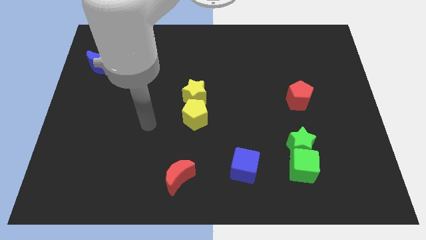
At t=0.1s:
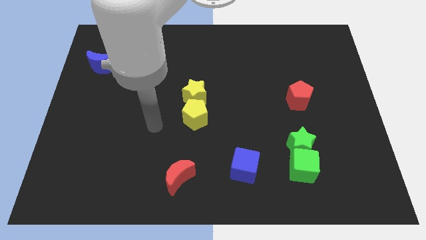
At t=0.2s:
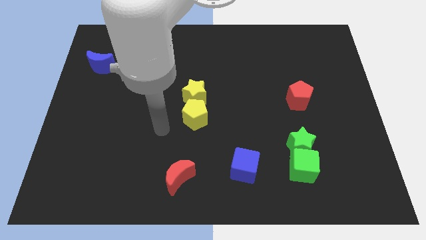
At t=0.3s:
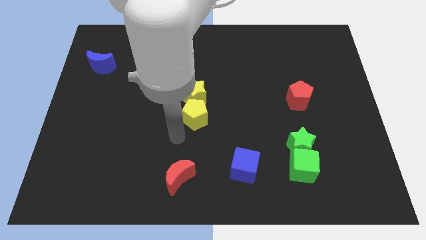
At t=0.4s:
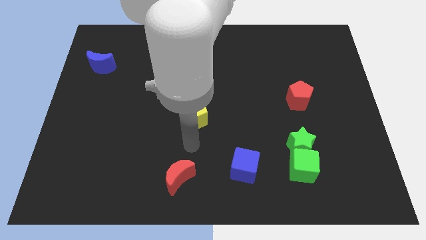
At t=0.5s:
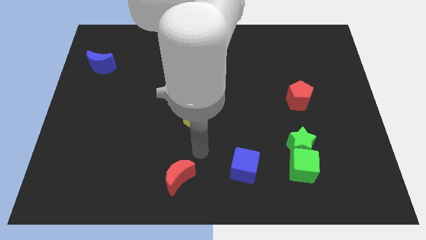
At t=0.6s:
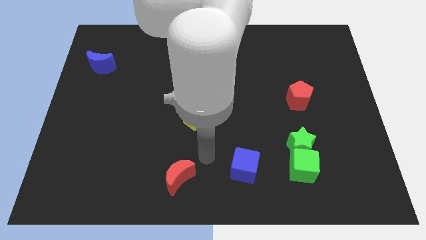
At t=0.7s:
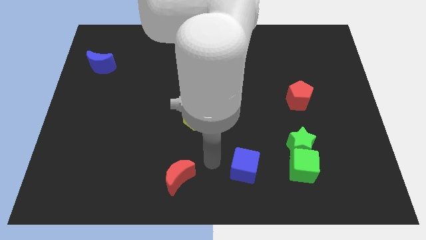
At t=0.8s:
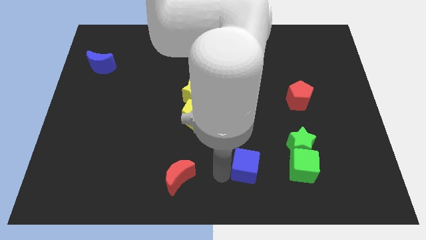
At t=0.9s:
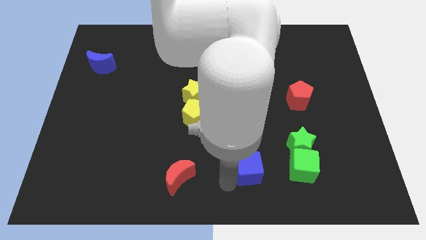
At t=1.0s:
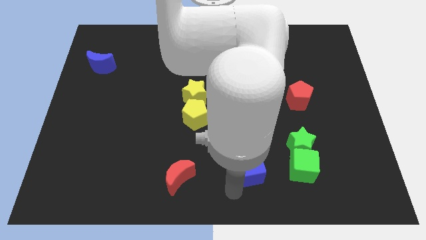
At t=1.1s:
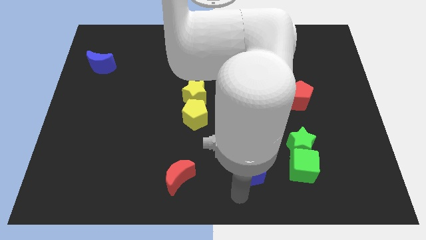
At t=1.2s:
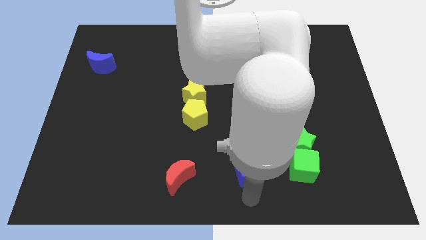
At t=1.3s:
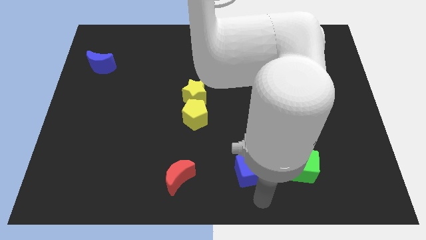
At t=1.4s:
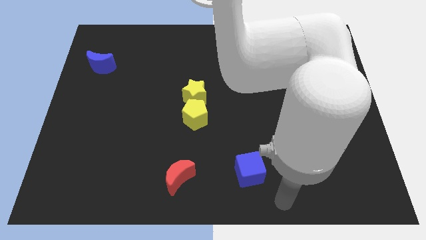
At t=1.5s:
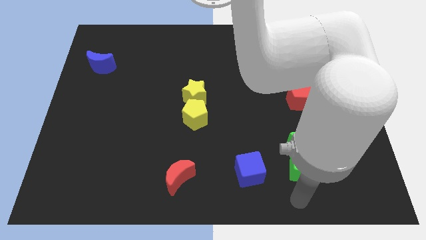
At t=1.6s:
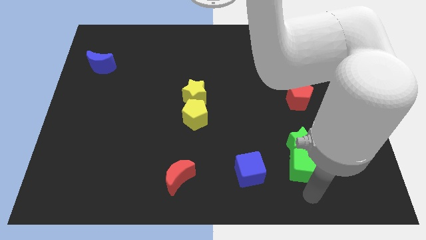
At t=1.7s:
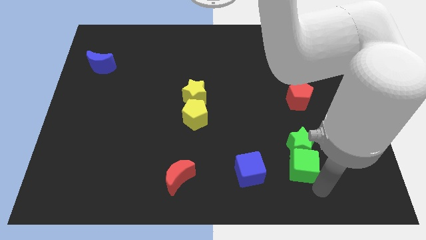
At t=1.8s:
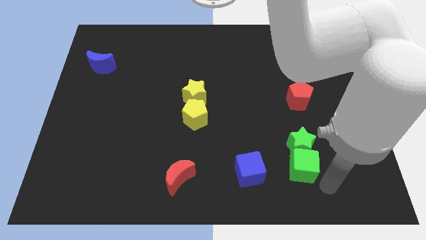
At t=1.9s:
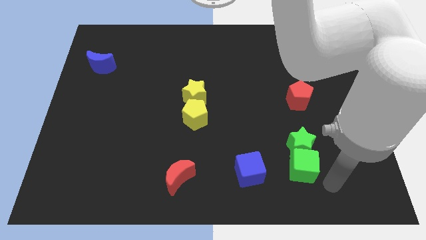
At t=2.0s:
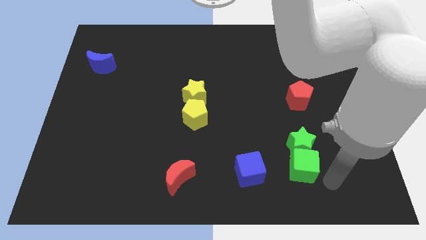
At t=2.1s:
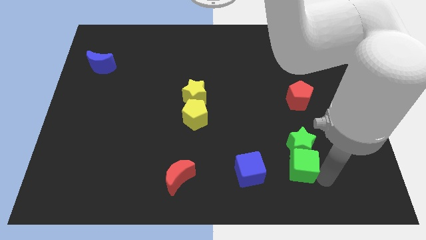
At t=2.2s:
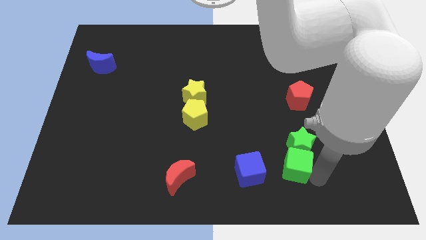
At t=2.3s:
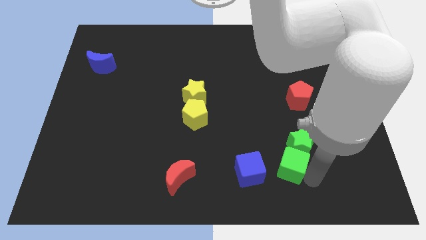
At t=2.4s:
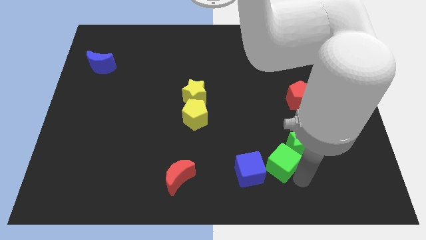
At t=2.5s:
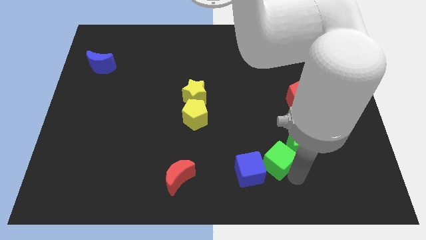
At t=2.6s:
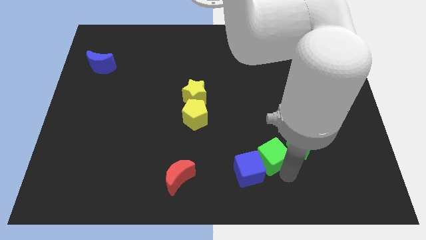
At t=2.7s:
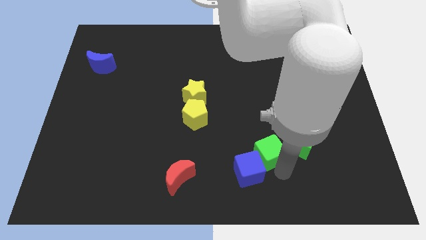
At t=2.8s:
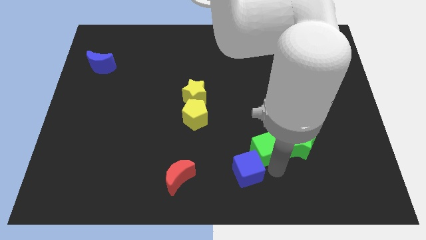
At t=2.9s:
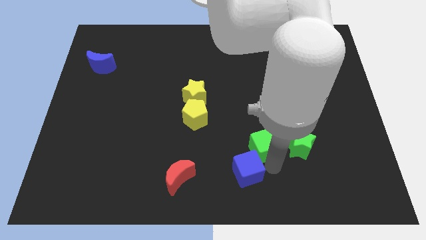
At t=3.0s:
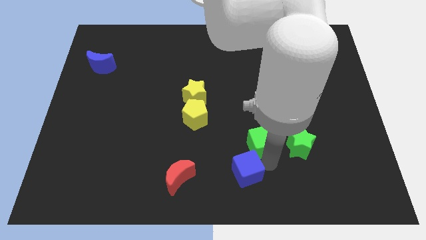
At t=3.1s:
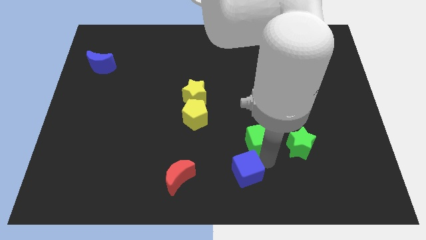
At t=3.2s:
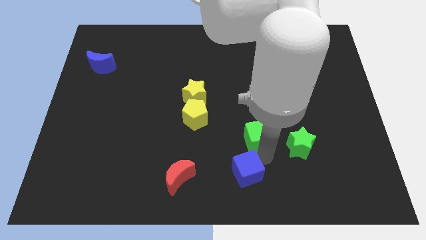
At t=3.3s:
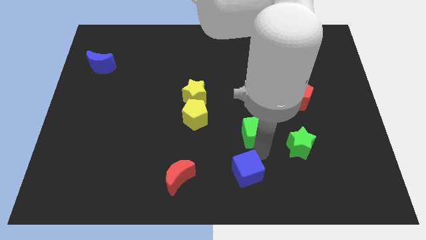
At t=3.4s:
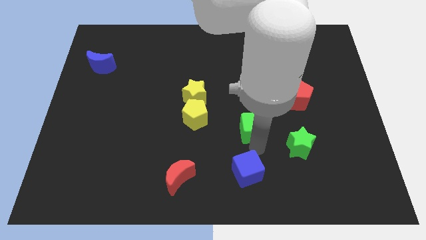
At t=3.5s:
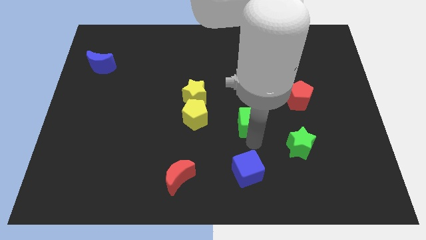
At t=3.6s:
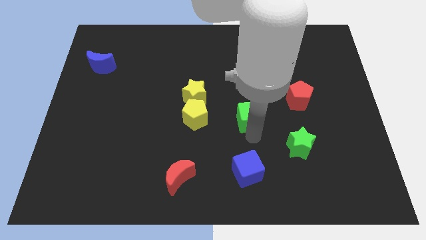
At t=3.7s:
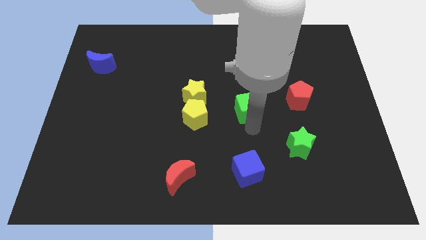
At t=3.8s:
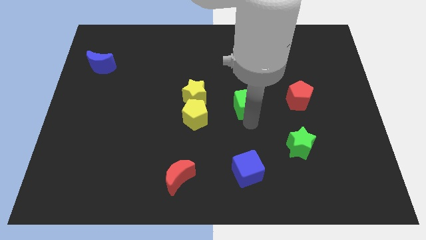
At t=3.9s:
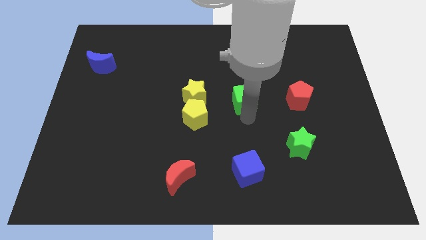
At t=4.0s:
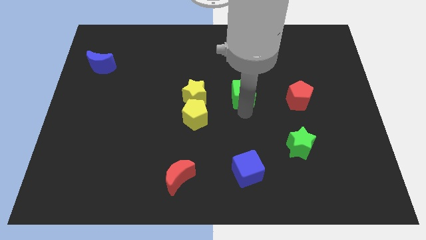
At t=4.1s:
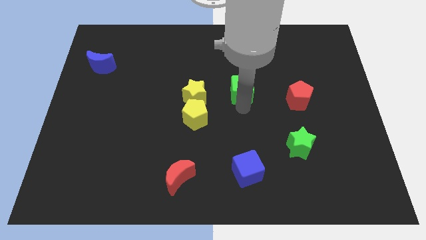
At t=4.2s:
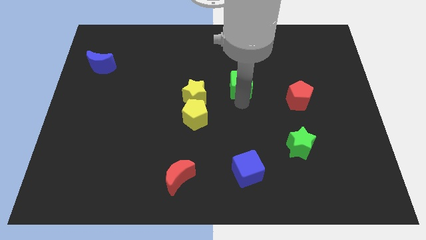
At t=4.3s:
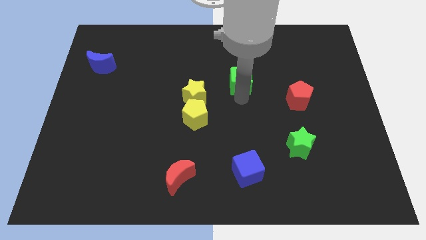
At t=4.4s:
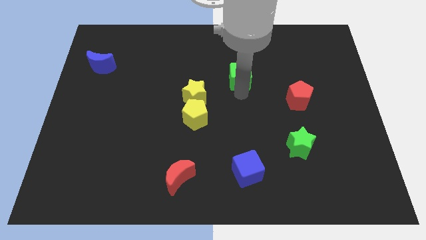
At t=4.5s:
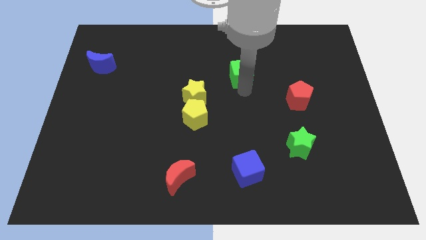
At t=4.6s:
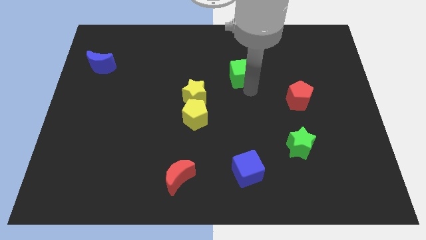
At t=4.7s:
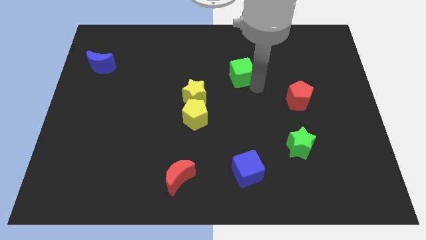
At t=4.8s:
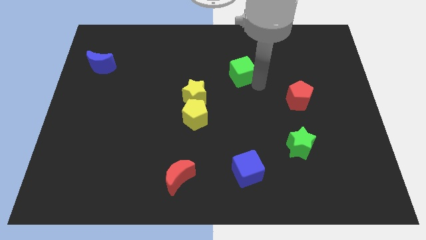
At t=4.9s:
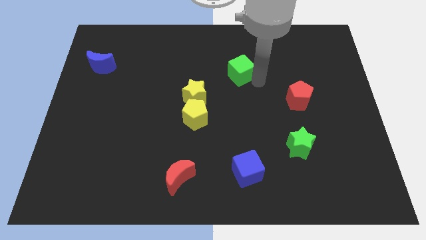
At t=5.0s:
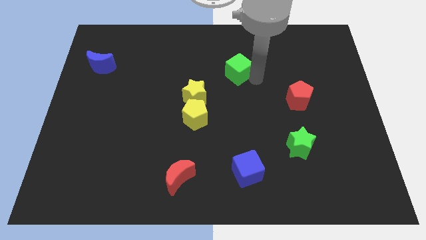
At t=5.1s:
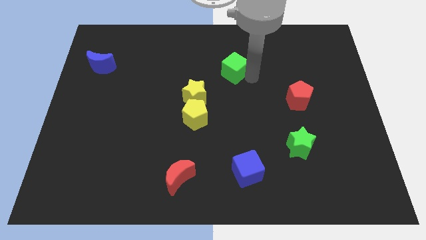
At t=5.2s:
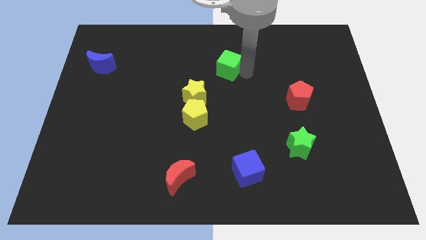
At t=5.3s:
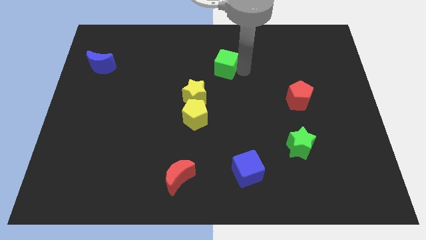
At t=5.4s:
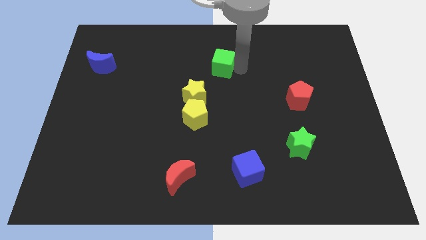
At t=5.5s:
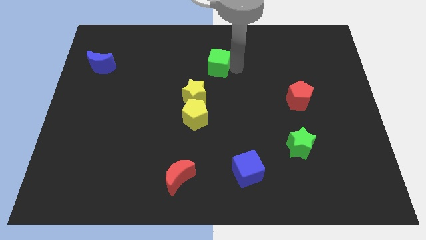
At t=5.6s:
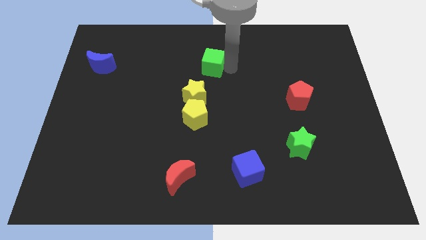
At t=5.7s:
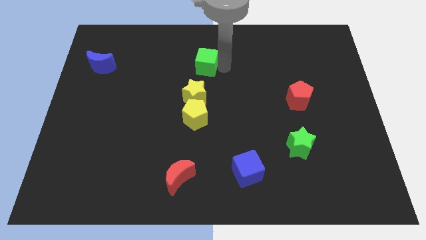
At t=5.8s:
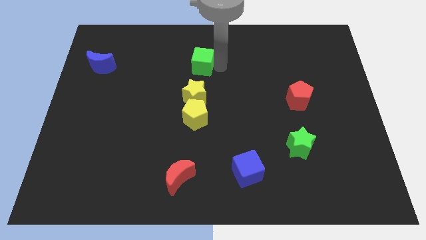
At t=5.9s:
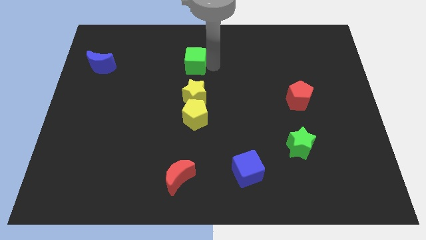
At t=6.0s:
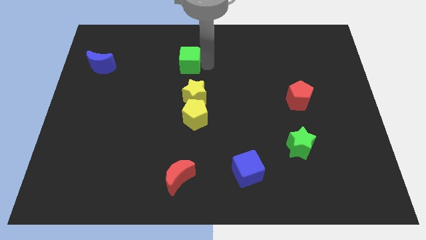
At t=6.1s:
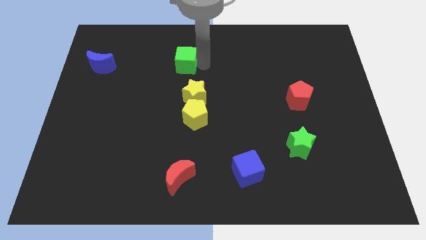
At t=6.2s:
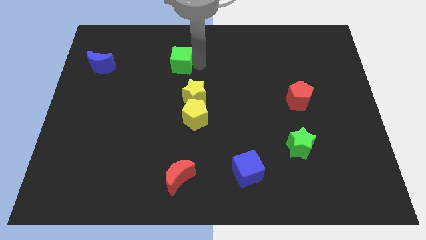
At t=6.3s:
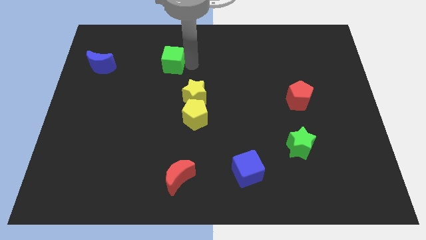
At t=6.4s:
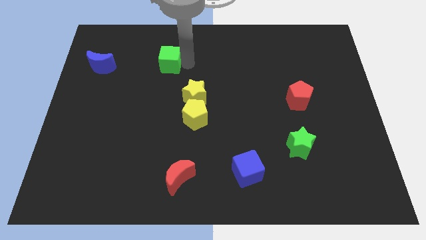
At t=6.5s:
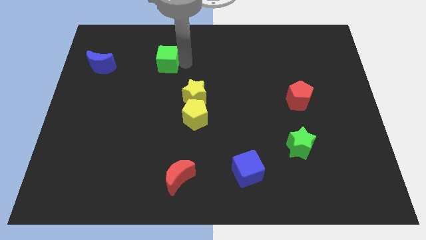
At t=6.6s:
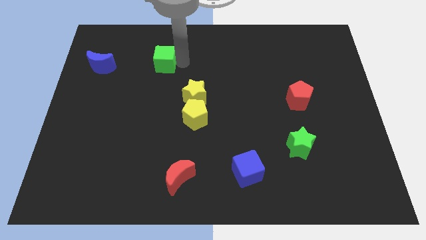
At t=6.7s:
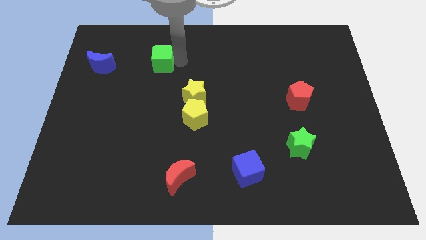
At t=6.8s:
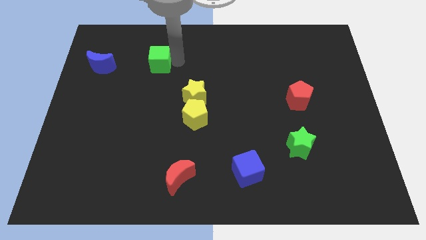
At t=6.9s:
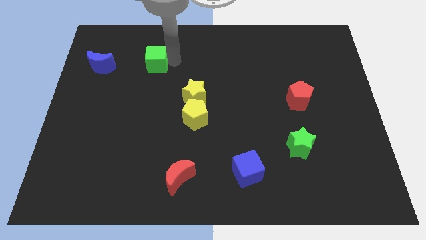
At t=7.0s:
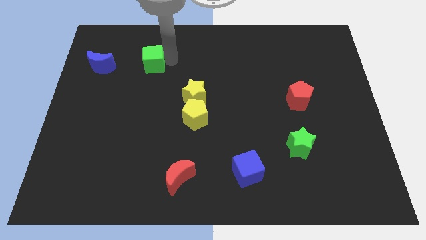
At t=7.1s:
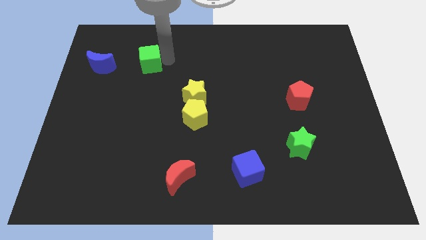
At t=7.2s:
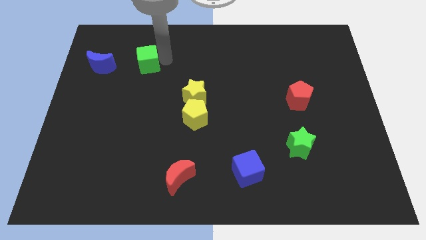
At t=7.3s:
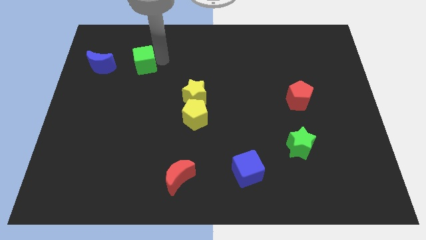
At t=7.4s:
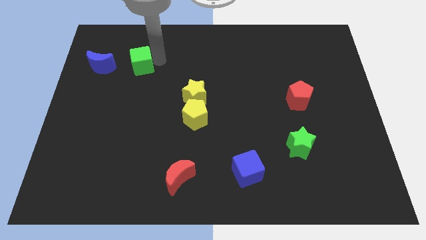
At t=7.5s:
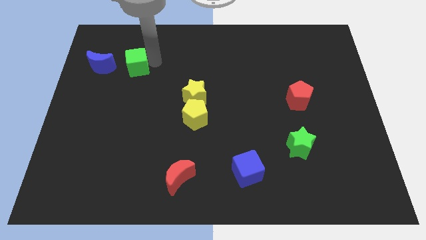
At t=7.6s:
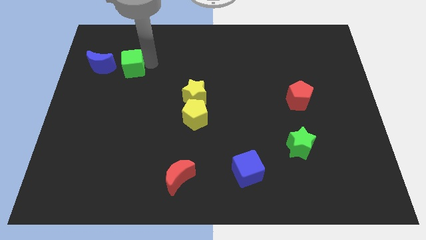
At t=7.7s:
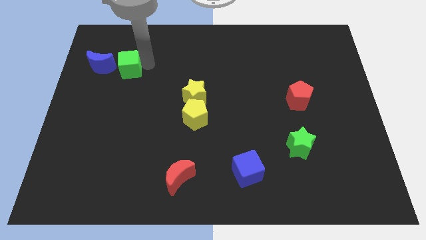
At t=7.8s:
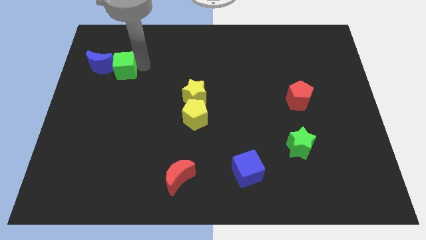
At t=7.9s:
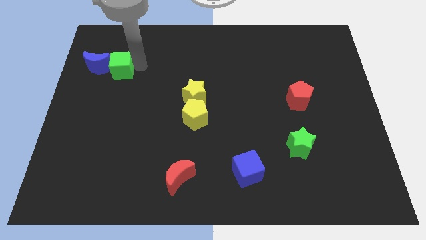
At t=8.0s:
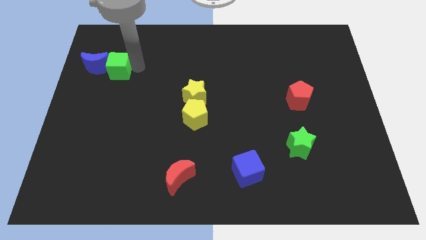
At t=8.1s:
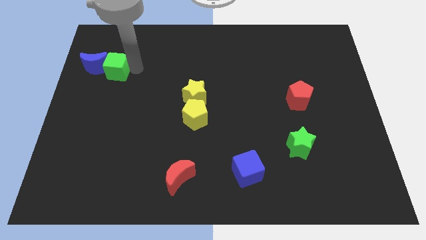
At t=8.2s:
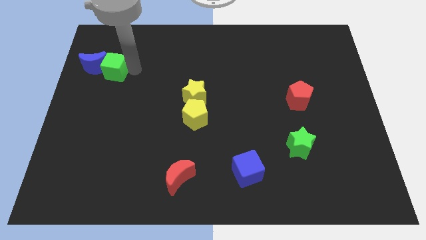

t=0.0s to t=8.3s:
push the green cube next to the blue moon

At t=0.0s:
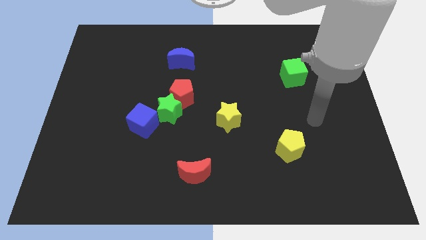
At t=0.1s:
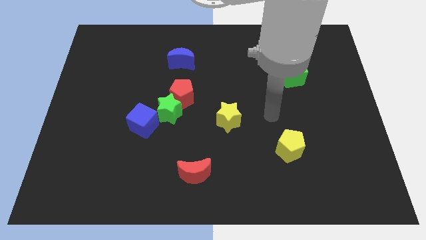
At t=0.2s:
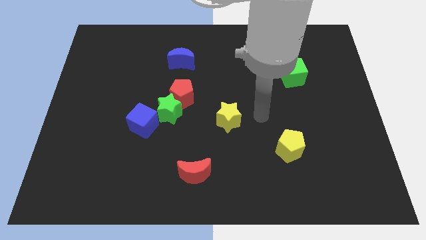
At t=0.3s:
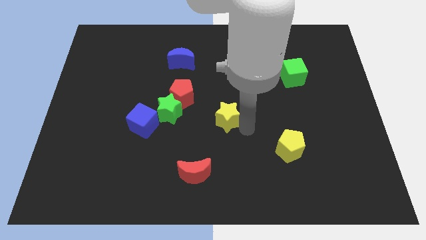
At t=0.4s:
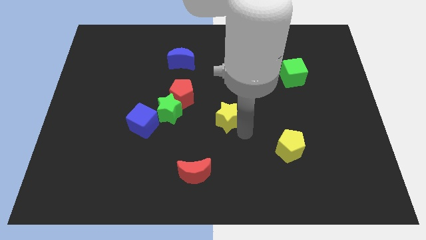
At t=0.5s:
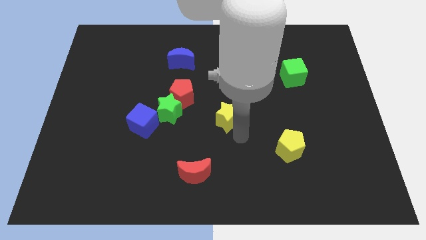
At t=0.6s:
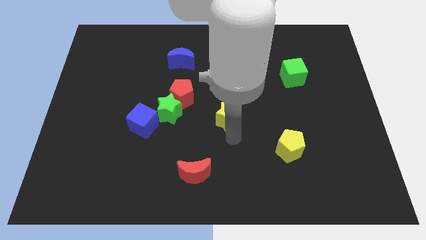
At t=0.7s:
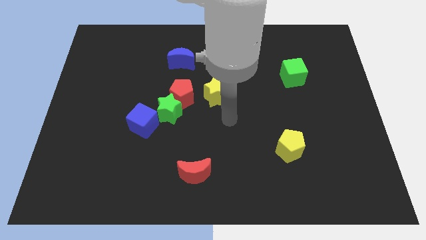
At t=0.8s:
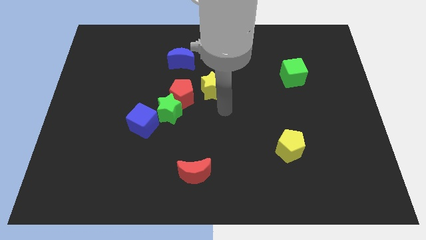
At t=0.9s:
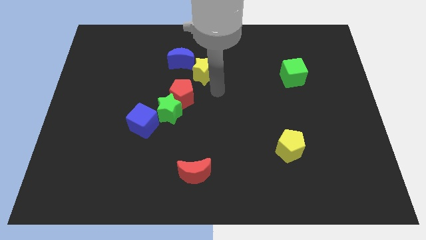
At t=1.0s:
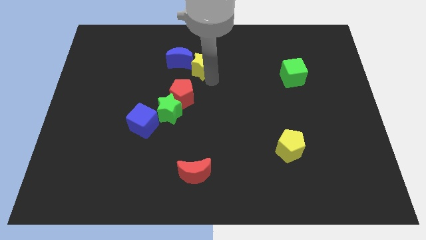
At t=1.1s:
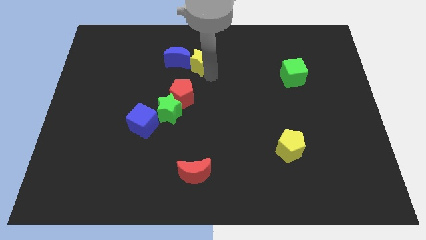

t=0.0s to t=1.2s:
move the yellow star to the blue moon
